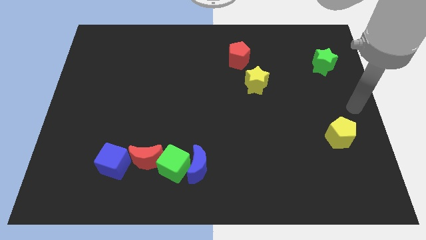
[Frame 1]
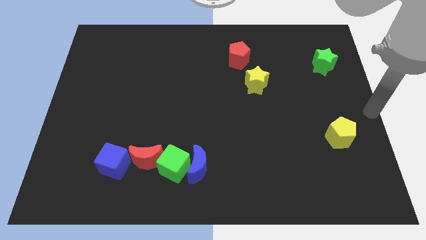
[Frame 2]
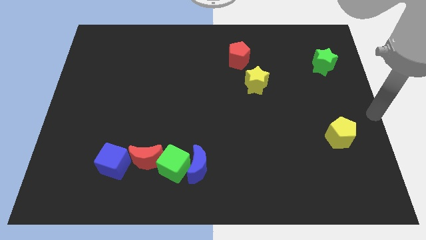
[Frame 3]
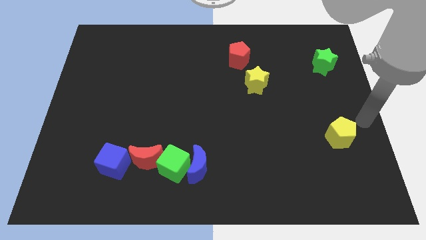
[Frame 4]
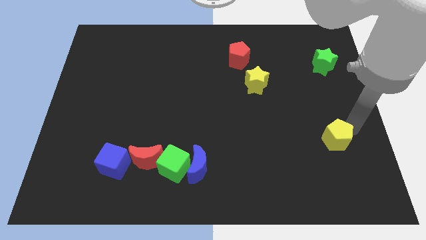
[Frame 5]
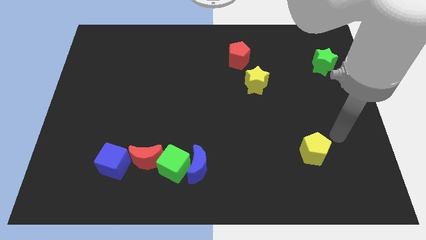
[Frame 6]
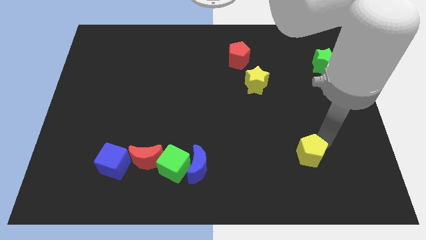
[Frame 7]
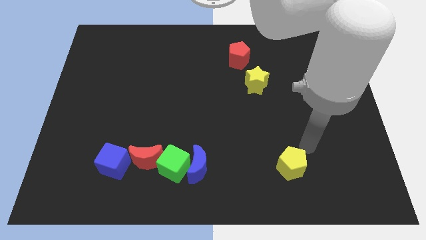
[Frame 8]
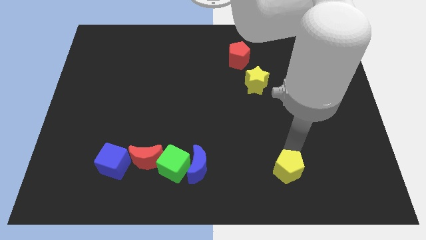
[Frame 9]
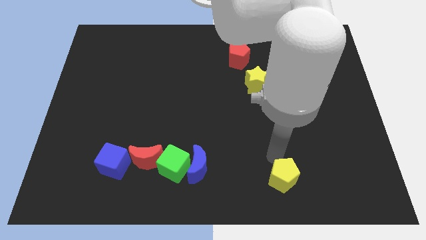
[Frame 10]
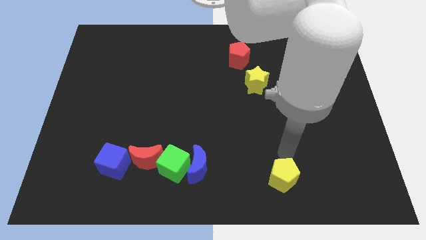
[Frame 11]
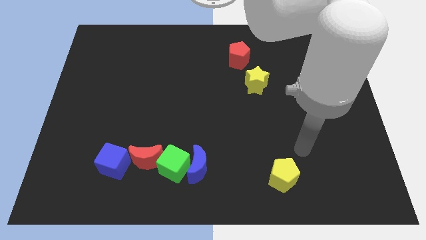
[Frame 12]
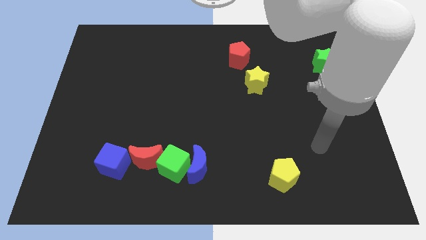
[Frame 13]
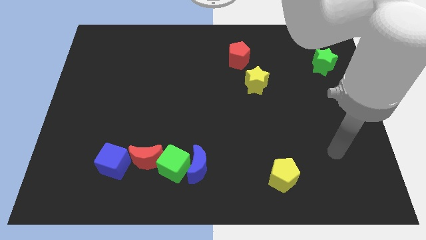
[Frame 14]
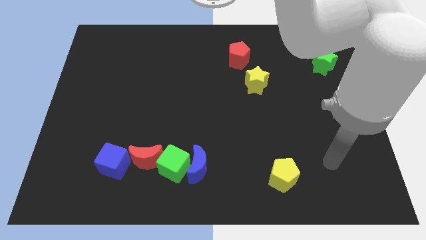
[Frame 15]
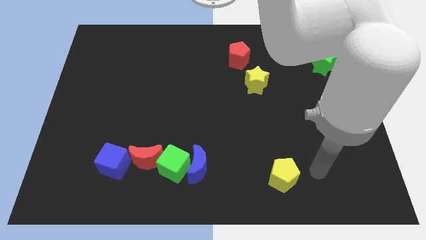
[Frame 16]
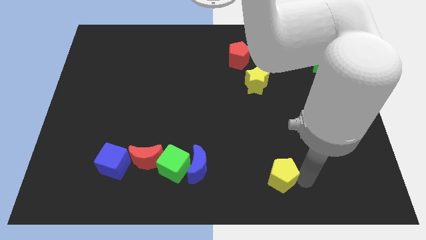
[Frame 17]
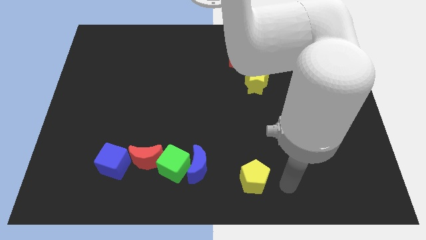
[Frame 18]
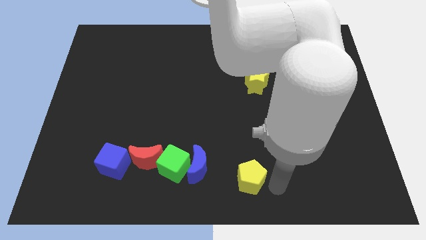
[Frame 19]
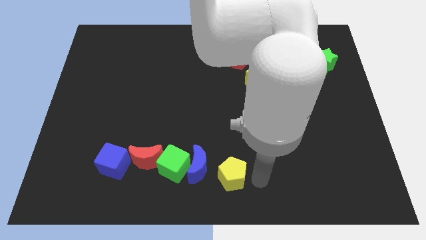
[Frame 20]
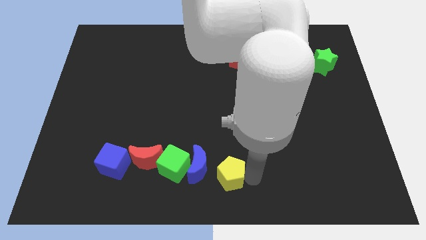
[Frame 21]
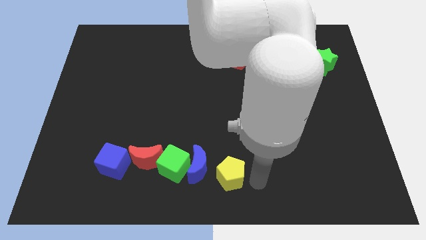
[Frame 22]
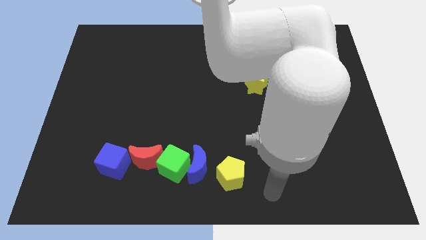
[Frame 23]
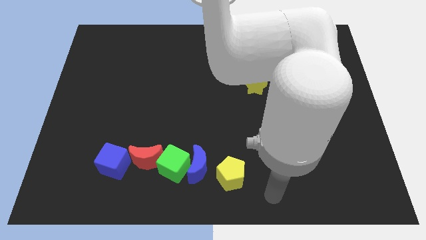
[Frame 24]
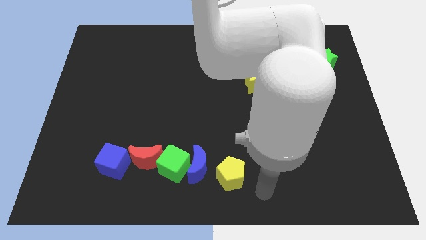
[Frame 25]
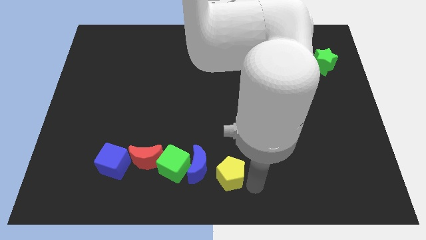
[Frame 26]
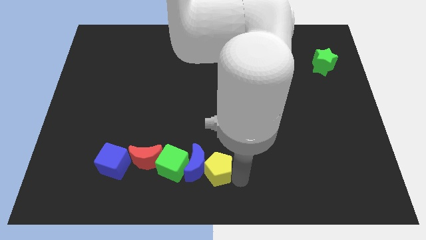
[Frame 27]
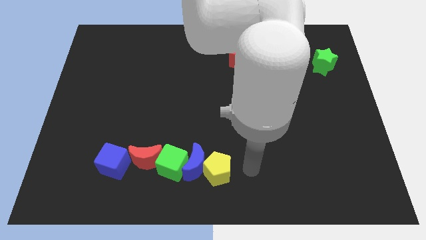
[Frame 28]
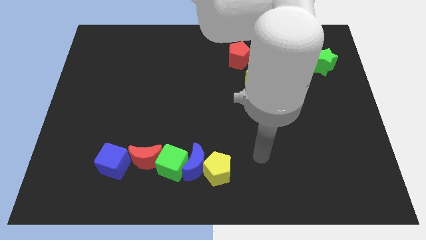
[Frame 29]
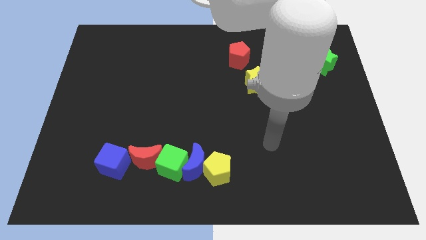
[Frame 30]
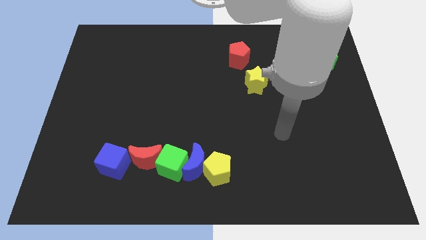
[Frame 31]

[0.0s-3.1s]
push the yellow pentagon into the blue crescent

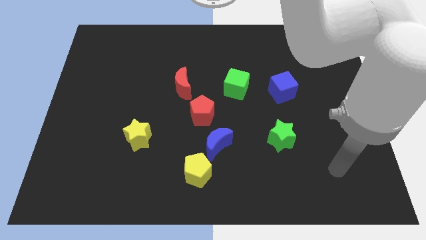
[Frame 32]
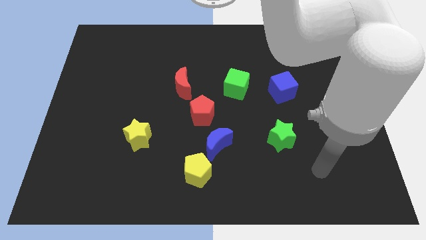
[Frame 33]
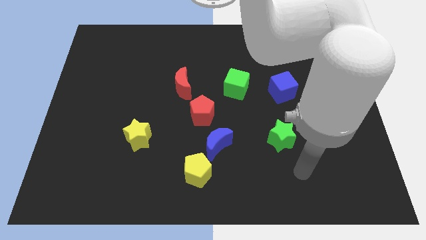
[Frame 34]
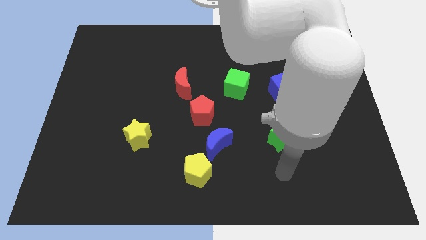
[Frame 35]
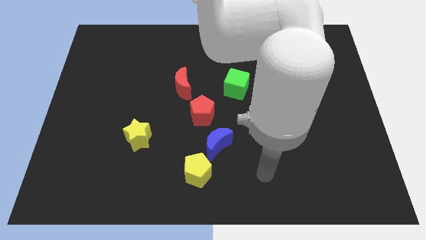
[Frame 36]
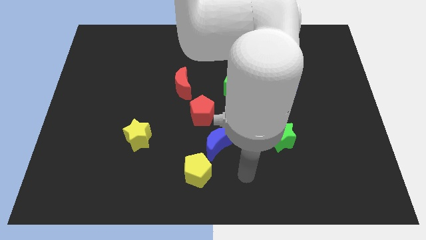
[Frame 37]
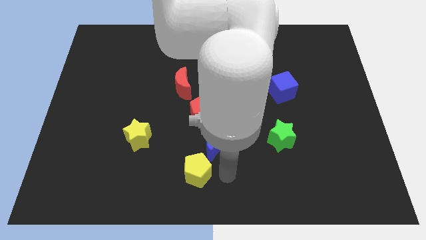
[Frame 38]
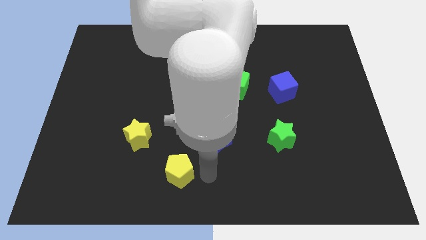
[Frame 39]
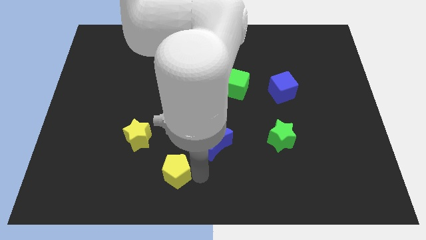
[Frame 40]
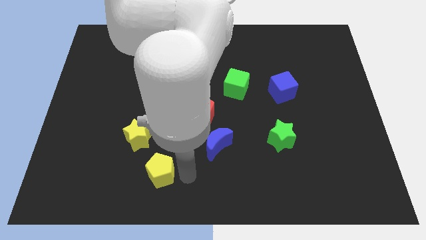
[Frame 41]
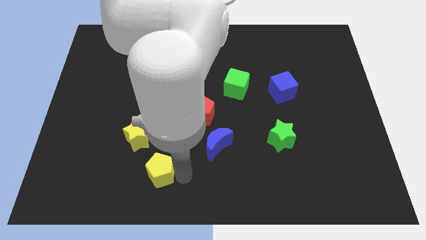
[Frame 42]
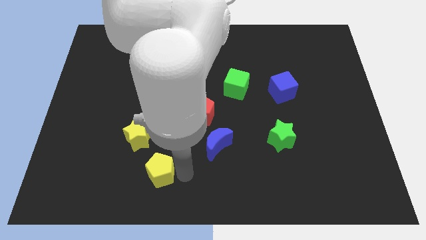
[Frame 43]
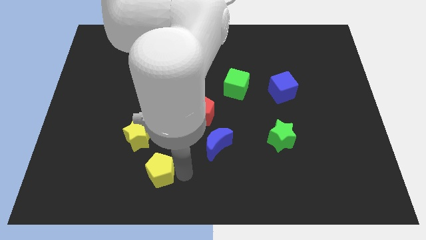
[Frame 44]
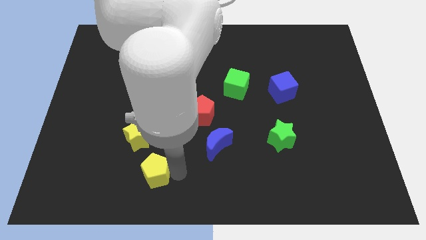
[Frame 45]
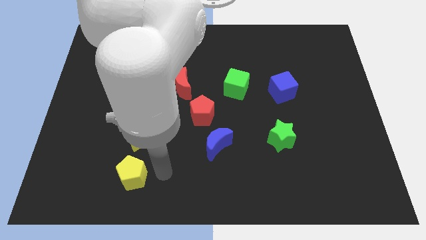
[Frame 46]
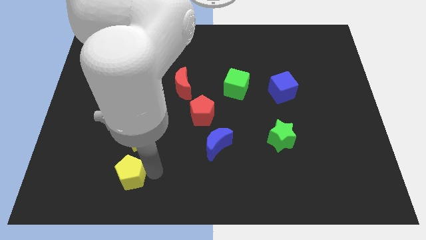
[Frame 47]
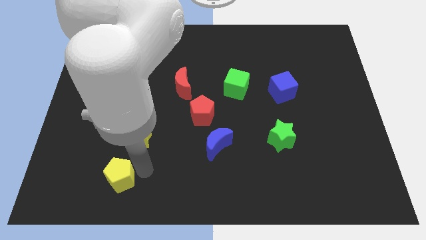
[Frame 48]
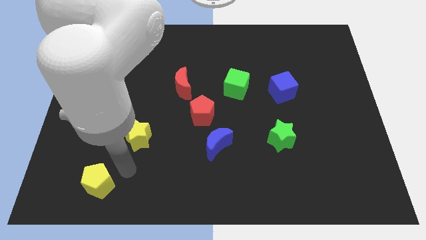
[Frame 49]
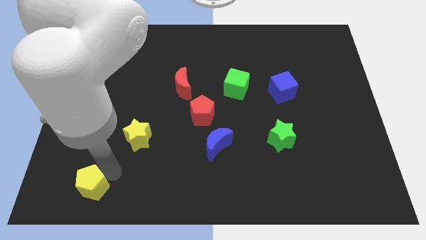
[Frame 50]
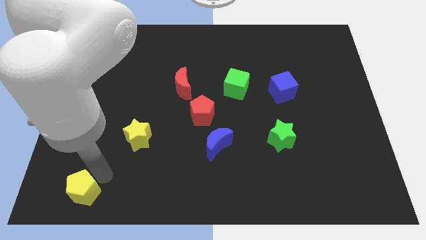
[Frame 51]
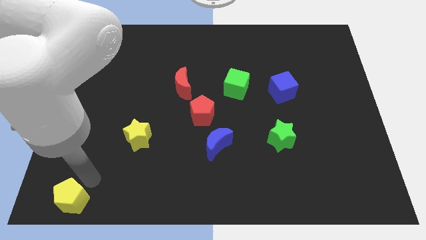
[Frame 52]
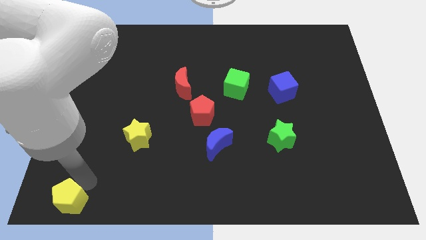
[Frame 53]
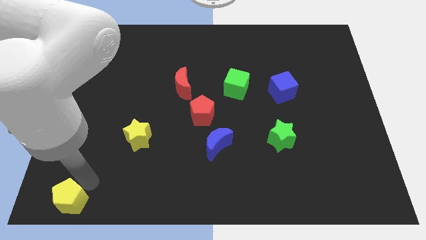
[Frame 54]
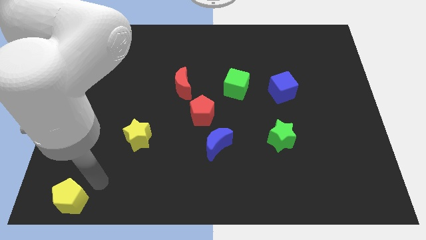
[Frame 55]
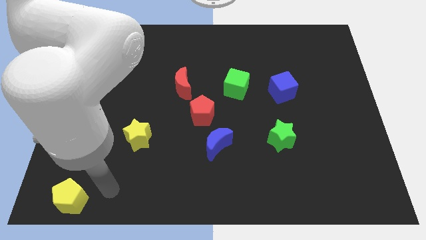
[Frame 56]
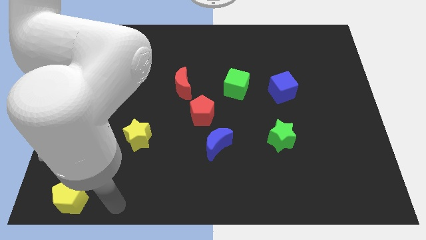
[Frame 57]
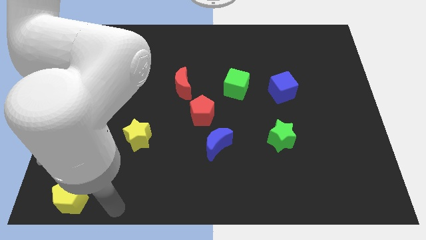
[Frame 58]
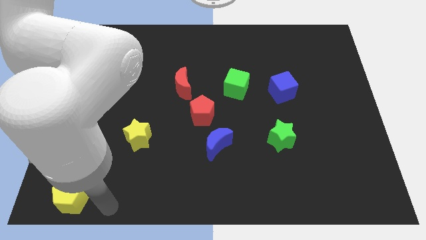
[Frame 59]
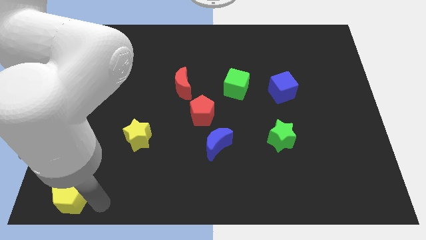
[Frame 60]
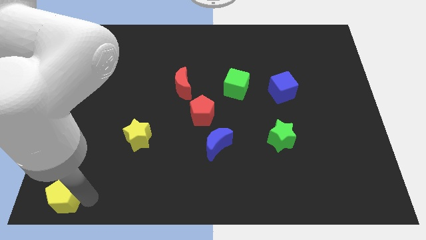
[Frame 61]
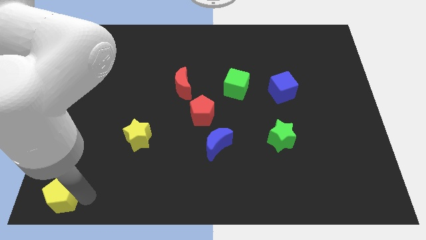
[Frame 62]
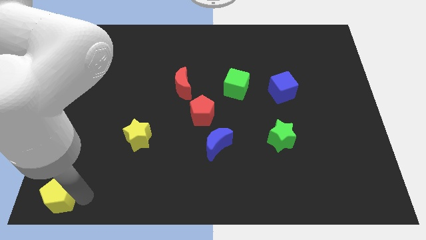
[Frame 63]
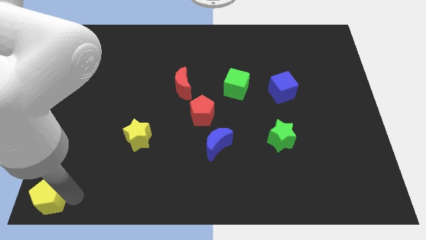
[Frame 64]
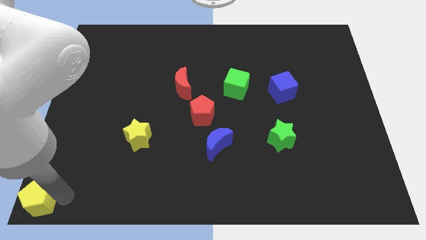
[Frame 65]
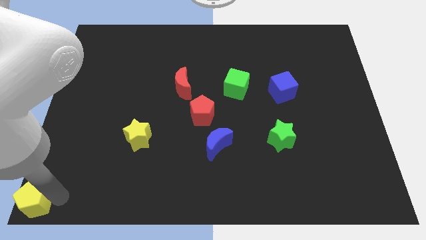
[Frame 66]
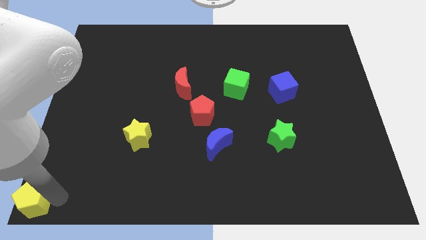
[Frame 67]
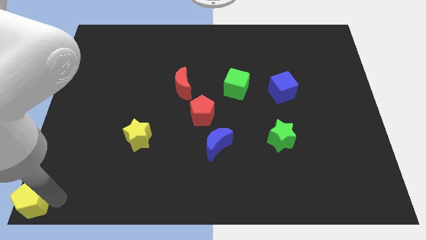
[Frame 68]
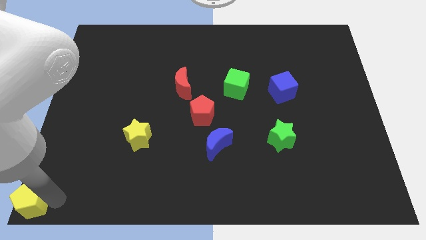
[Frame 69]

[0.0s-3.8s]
move the yellow pentagon to the bottom left corner

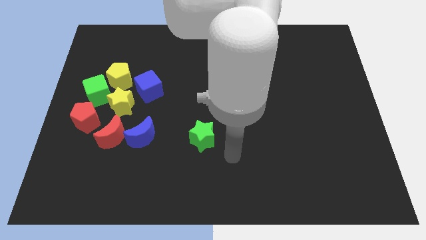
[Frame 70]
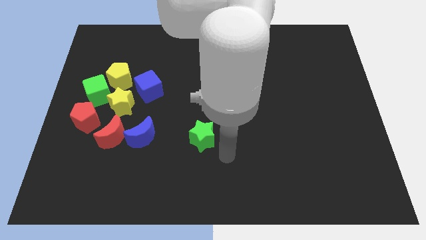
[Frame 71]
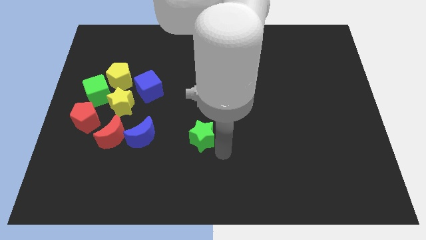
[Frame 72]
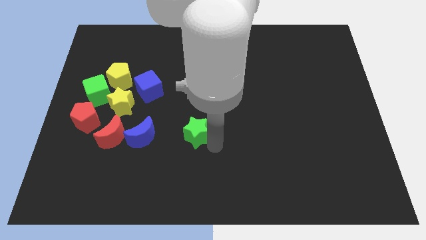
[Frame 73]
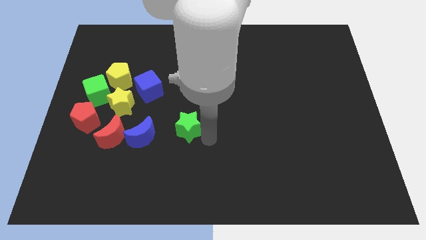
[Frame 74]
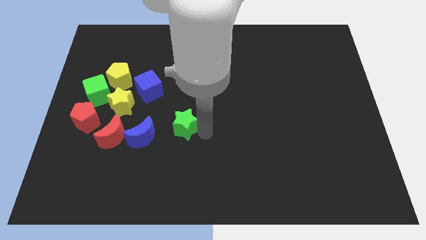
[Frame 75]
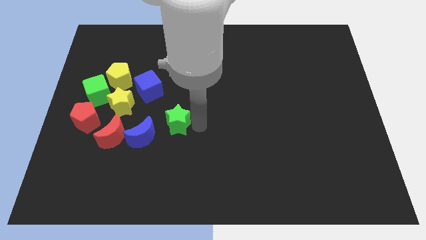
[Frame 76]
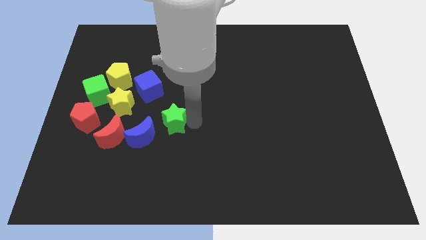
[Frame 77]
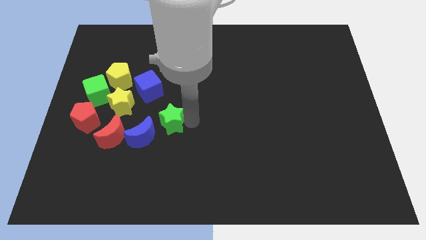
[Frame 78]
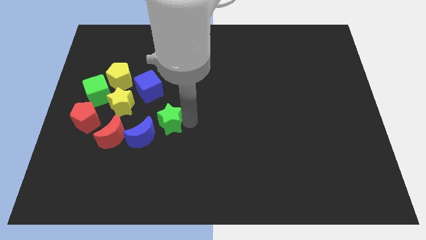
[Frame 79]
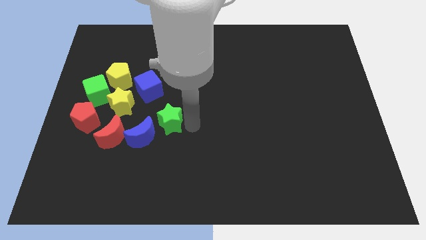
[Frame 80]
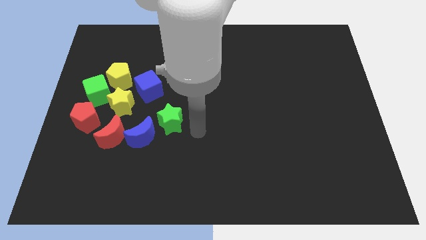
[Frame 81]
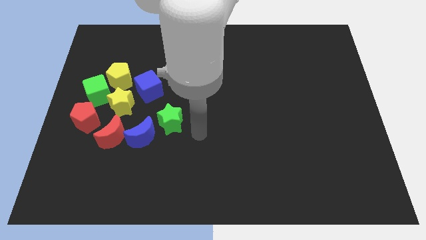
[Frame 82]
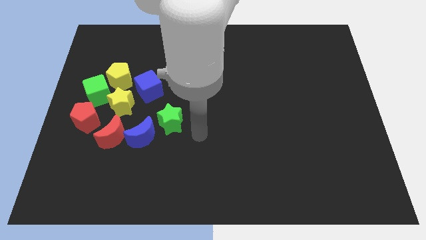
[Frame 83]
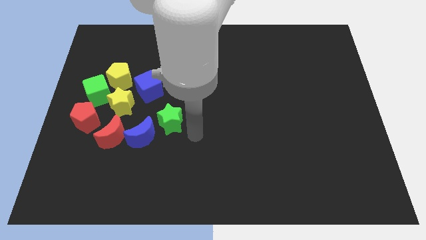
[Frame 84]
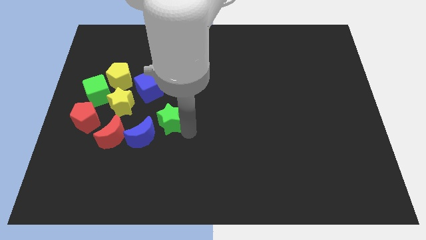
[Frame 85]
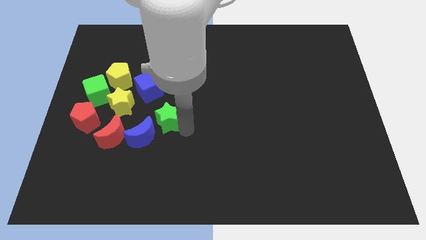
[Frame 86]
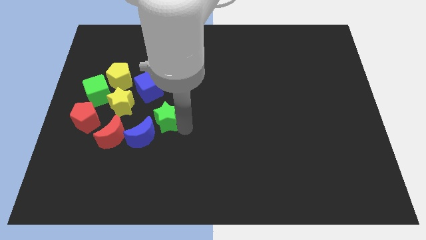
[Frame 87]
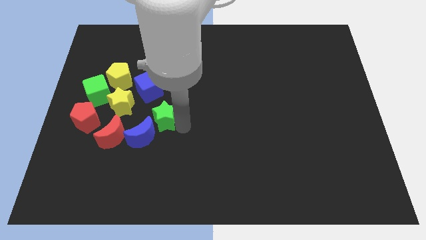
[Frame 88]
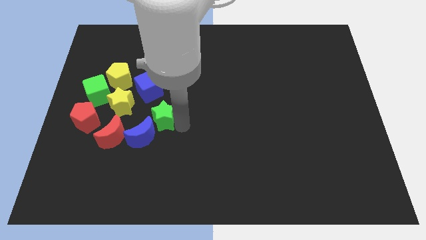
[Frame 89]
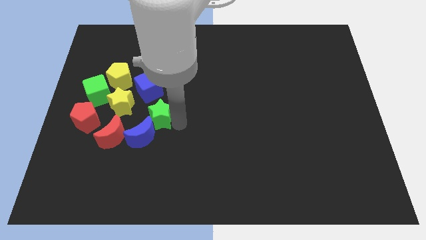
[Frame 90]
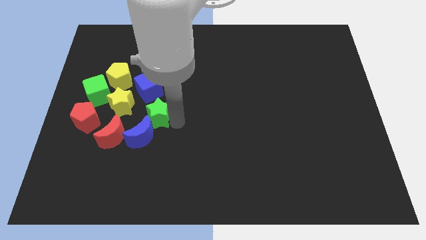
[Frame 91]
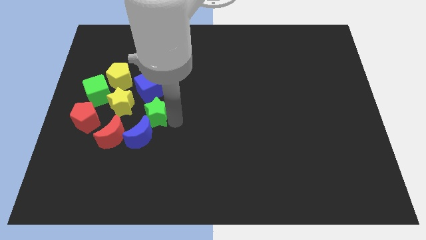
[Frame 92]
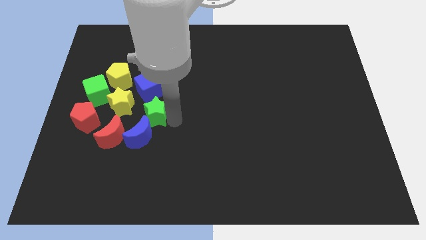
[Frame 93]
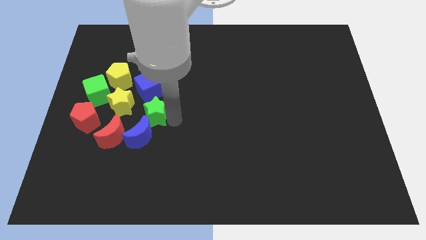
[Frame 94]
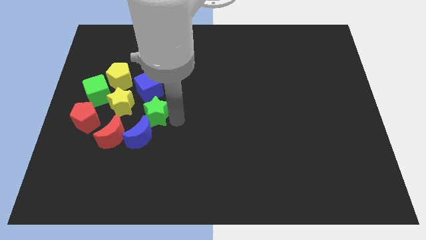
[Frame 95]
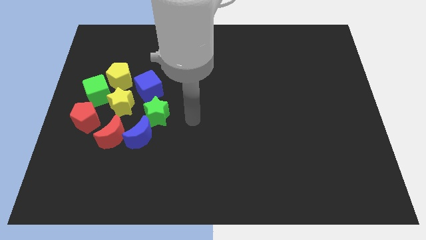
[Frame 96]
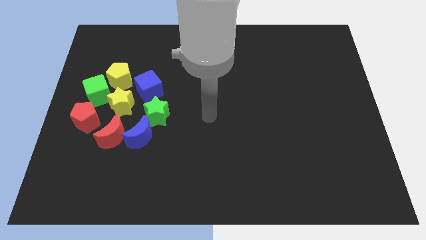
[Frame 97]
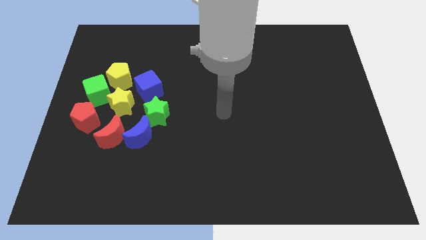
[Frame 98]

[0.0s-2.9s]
move the green star below the blue cube
